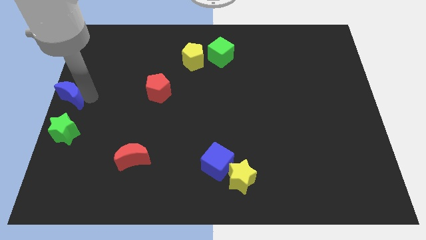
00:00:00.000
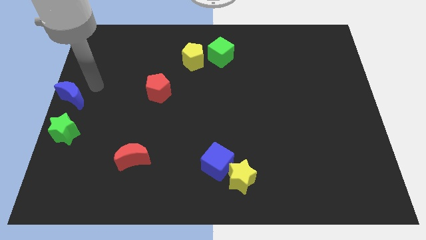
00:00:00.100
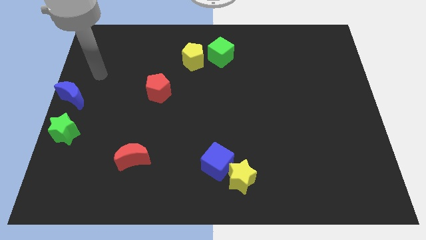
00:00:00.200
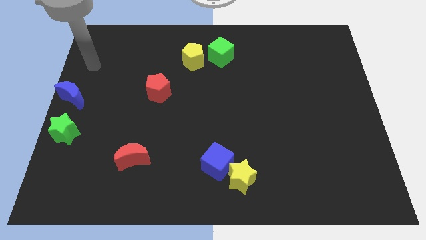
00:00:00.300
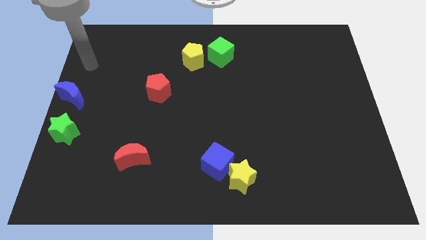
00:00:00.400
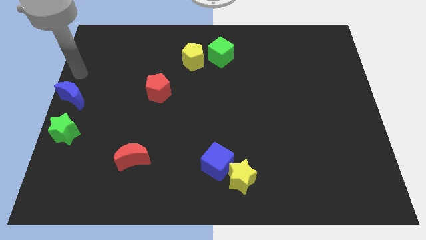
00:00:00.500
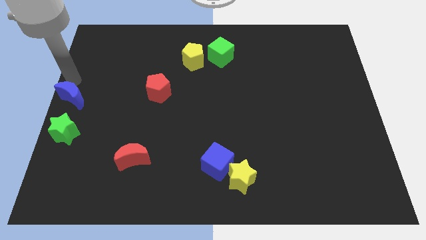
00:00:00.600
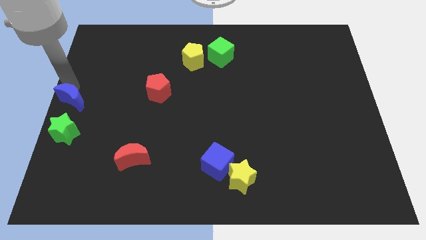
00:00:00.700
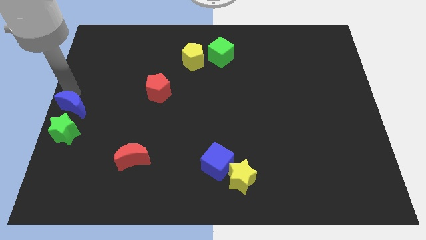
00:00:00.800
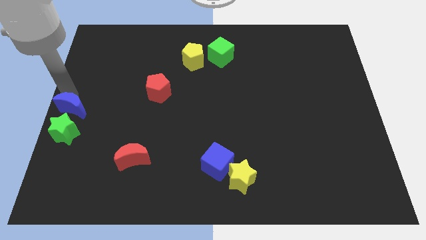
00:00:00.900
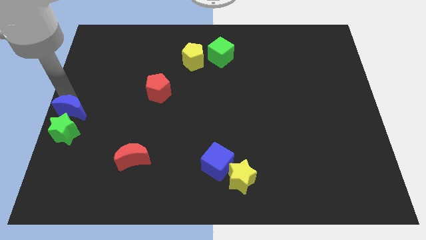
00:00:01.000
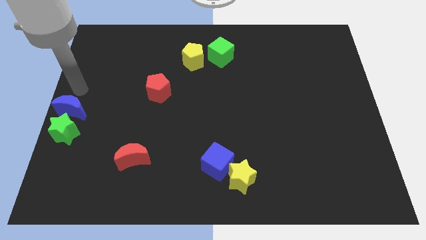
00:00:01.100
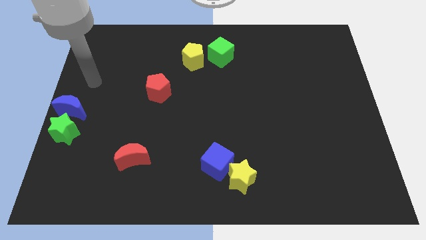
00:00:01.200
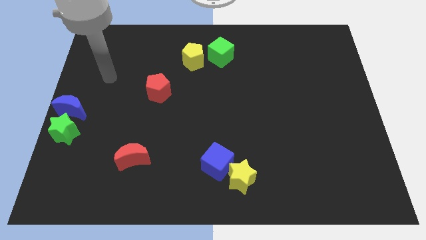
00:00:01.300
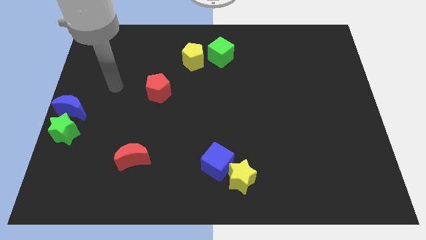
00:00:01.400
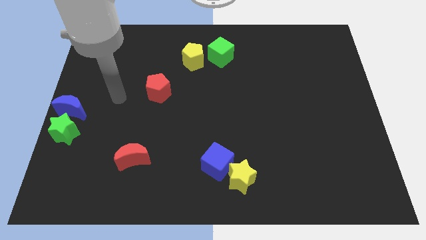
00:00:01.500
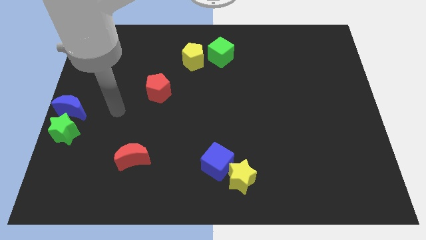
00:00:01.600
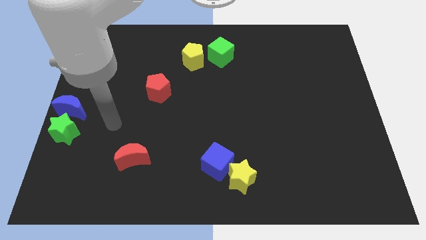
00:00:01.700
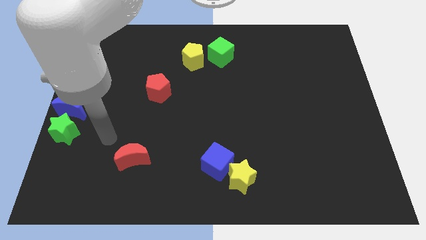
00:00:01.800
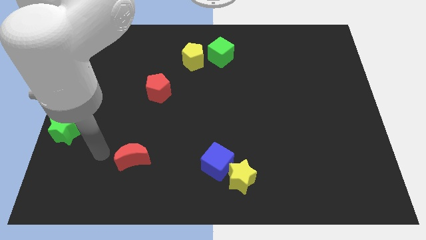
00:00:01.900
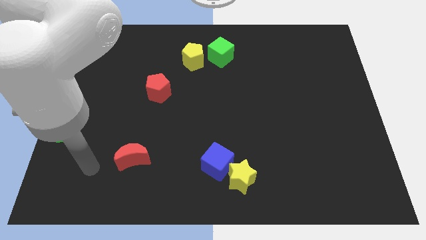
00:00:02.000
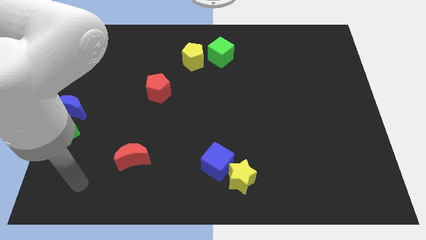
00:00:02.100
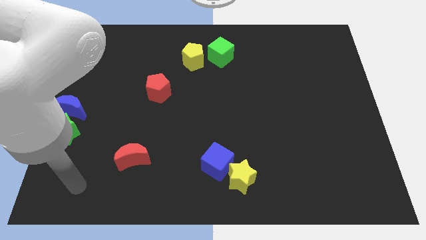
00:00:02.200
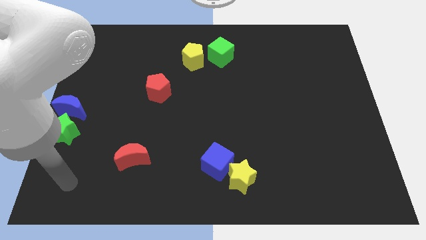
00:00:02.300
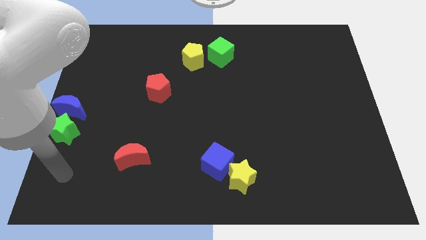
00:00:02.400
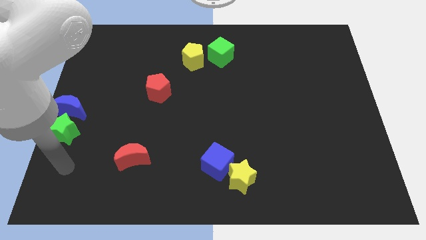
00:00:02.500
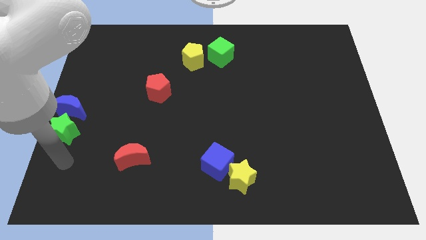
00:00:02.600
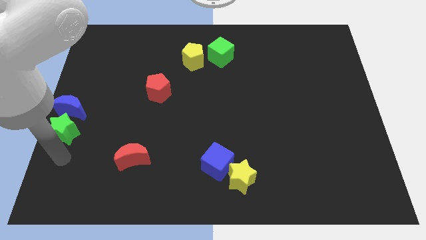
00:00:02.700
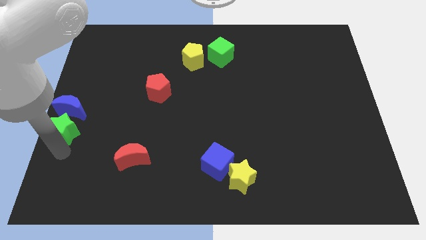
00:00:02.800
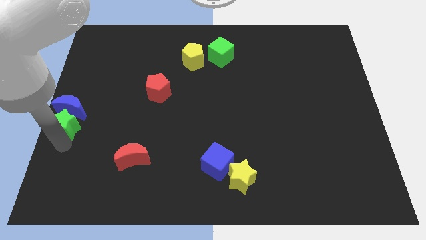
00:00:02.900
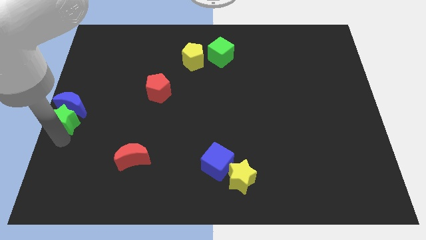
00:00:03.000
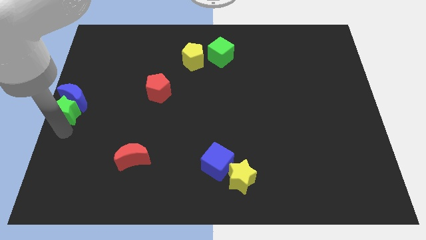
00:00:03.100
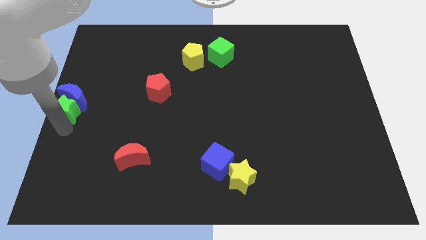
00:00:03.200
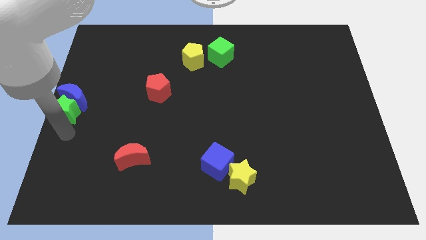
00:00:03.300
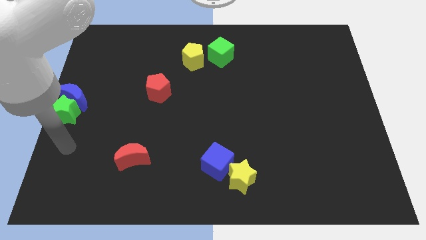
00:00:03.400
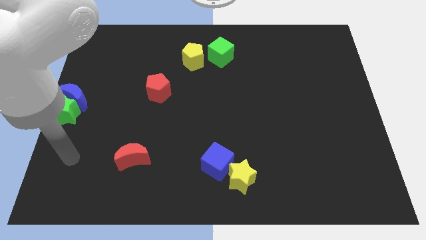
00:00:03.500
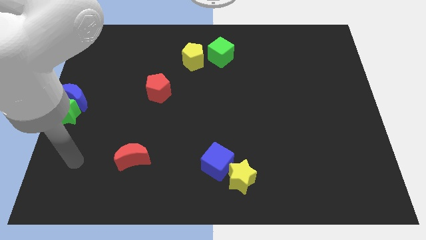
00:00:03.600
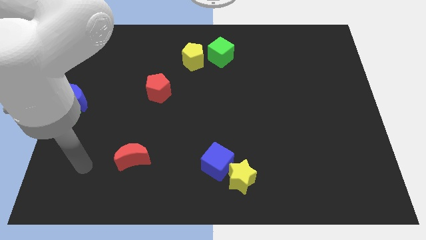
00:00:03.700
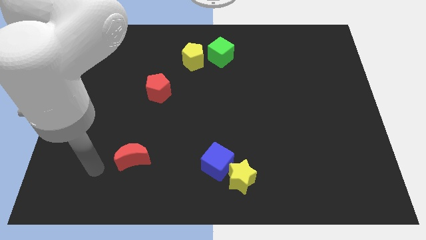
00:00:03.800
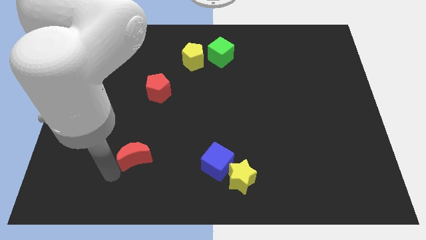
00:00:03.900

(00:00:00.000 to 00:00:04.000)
move green star into the blue crescent

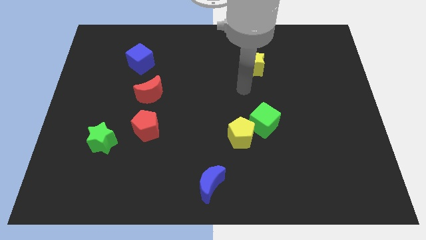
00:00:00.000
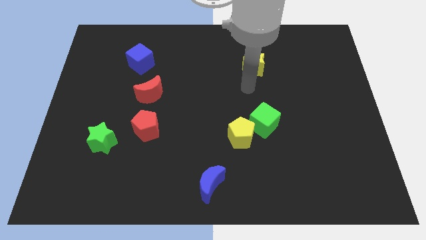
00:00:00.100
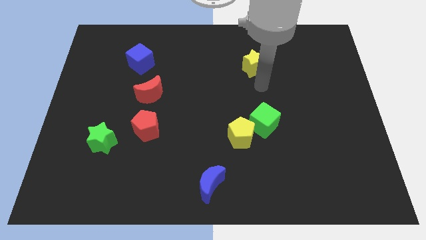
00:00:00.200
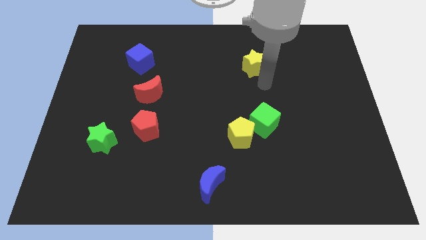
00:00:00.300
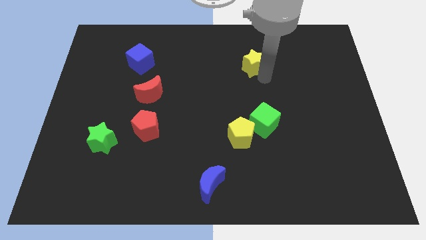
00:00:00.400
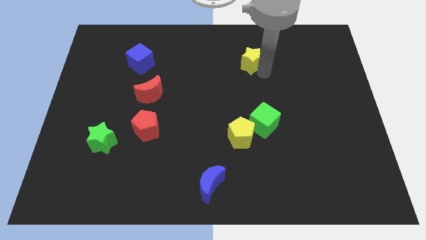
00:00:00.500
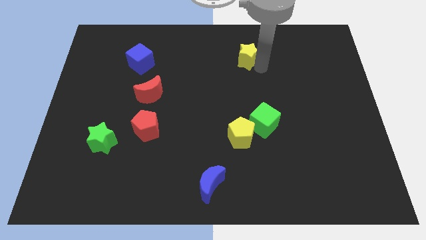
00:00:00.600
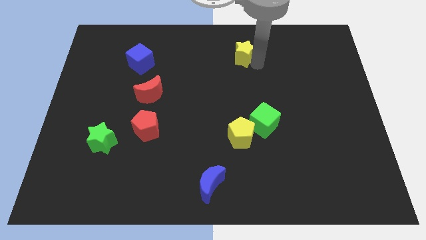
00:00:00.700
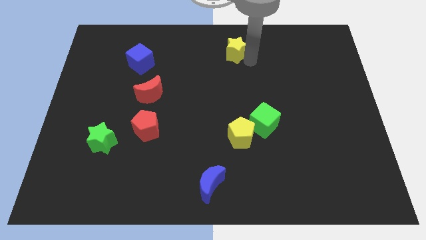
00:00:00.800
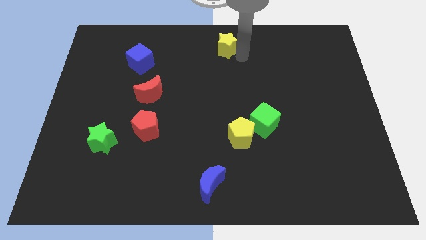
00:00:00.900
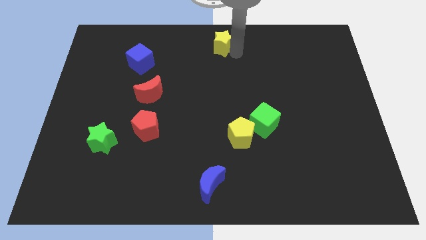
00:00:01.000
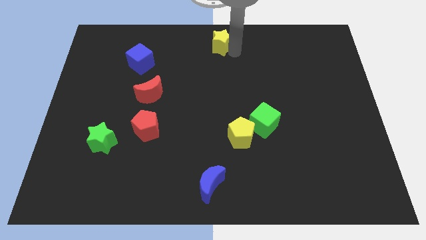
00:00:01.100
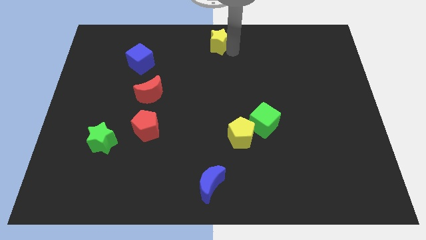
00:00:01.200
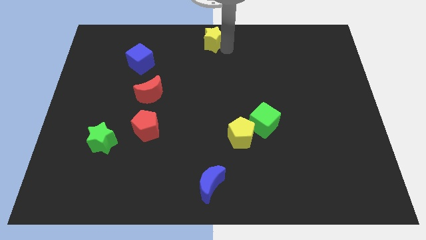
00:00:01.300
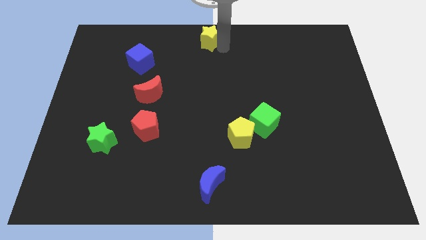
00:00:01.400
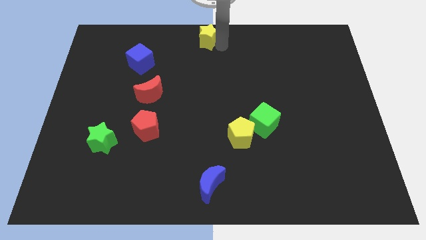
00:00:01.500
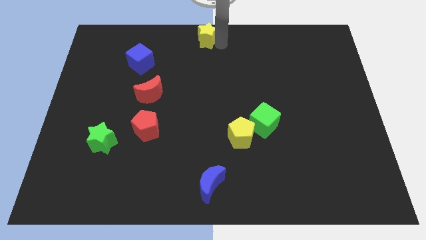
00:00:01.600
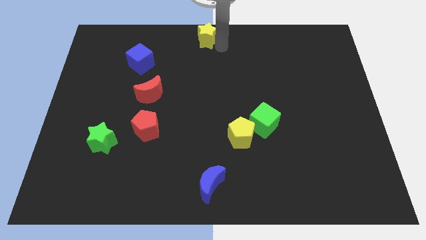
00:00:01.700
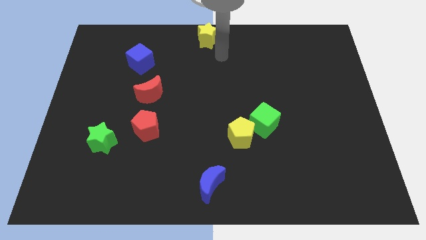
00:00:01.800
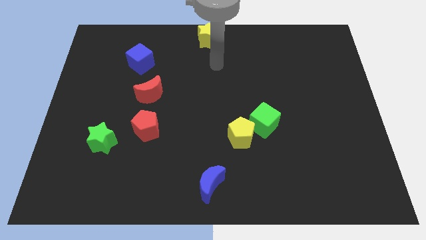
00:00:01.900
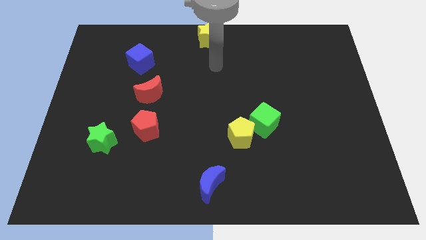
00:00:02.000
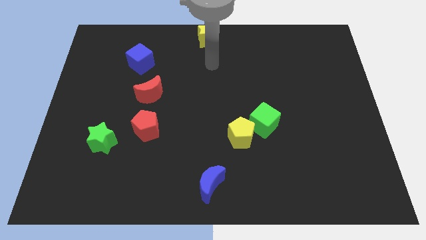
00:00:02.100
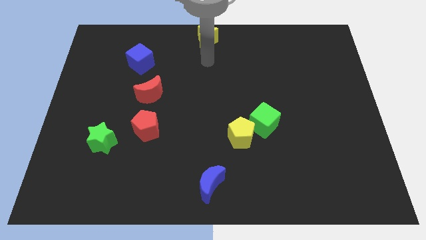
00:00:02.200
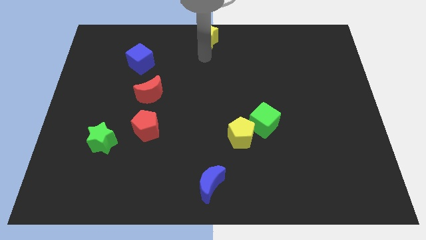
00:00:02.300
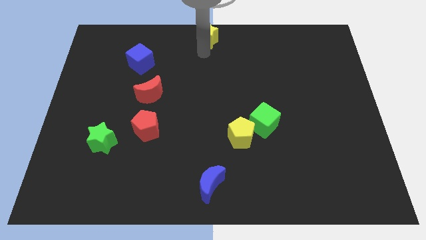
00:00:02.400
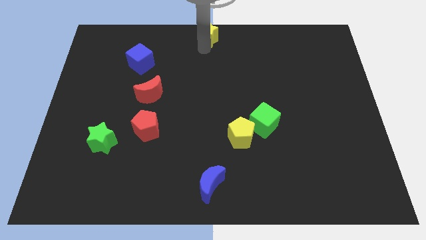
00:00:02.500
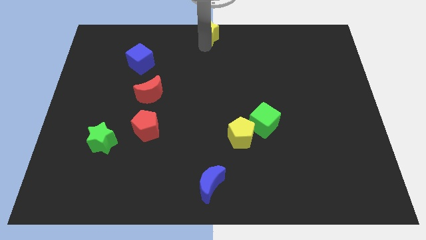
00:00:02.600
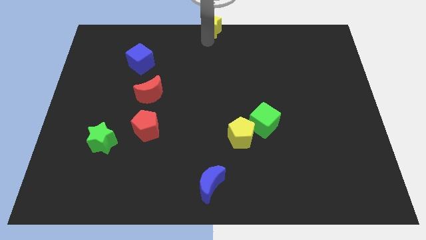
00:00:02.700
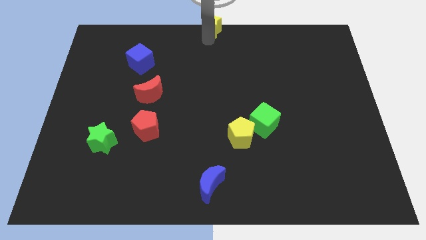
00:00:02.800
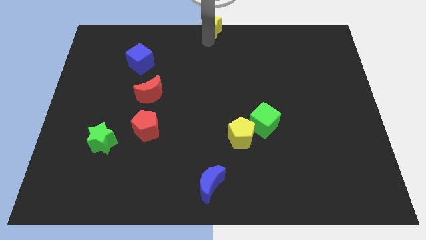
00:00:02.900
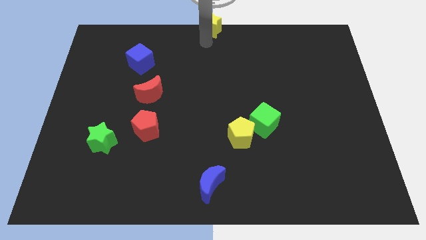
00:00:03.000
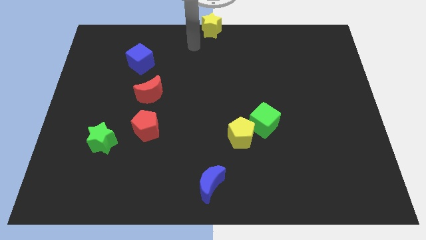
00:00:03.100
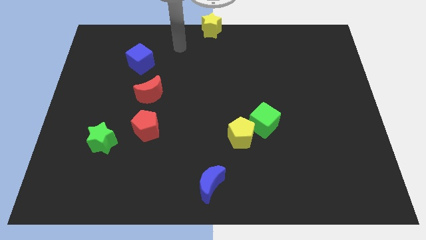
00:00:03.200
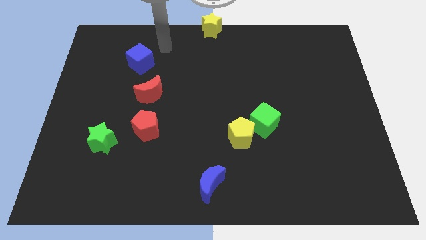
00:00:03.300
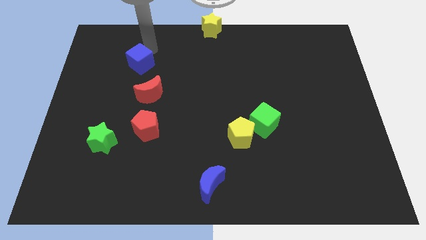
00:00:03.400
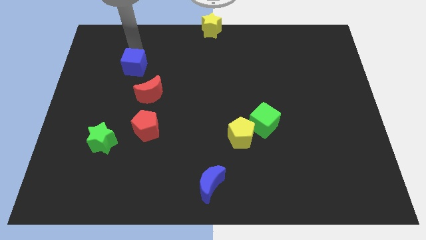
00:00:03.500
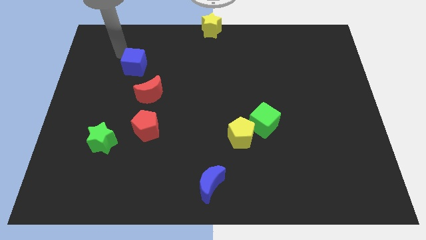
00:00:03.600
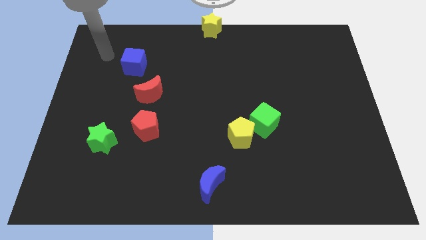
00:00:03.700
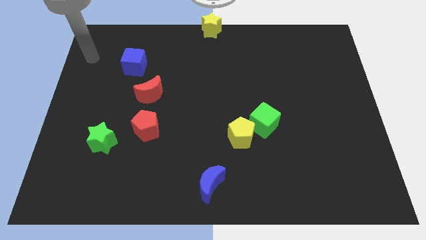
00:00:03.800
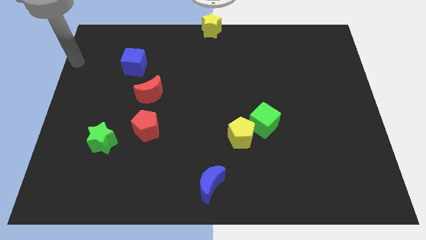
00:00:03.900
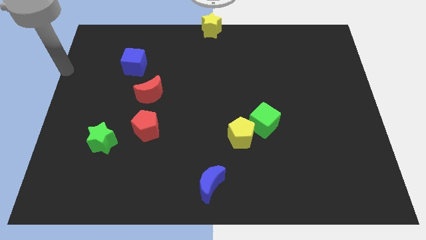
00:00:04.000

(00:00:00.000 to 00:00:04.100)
slightly touch on the top of the blue cube

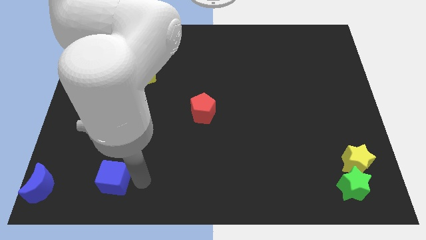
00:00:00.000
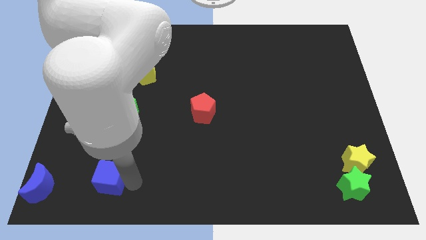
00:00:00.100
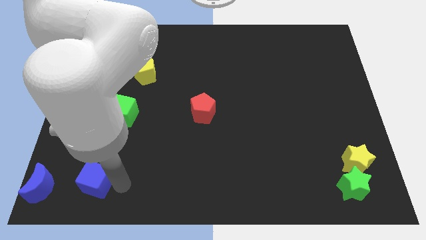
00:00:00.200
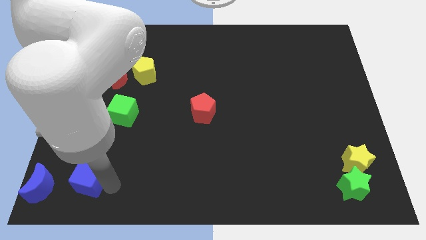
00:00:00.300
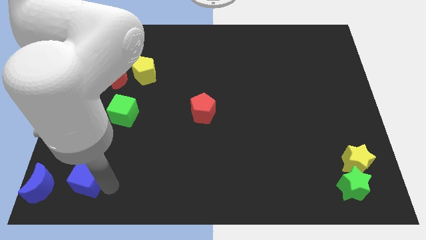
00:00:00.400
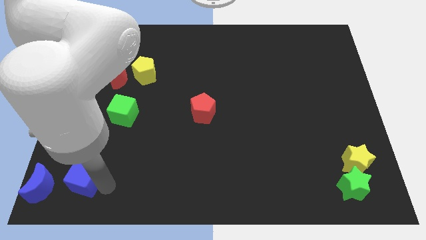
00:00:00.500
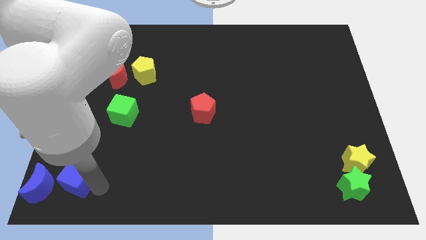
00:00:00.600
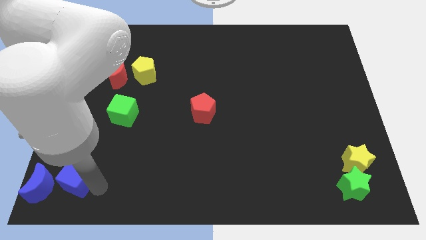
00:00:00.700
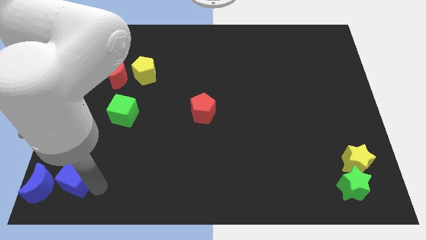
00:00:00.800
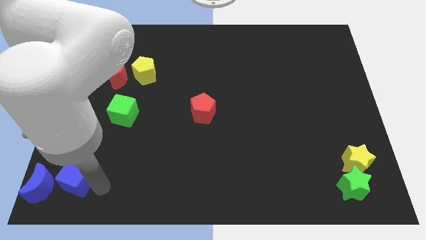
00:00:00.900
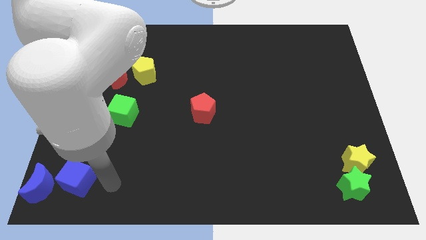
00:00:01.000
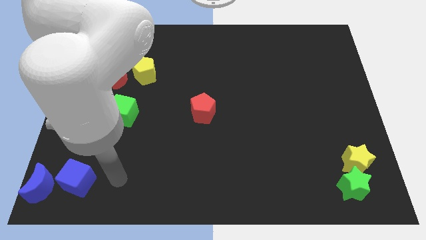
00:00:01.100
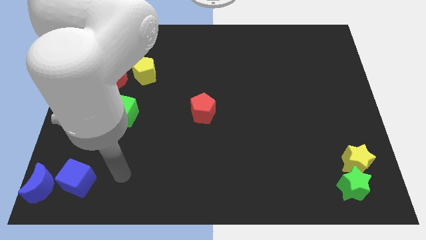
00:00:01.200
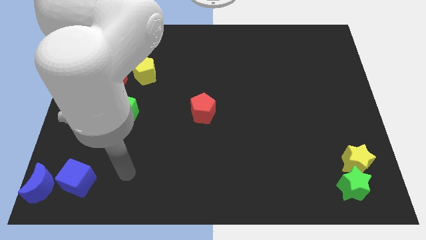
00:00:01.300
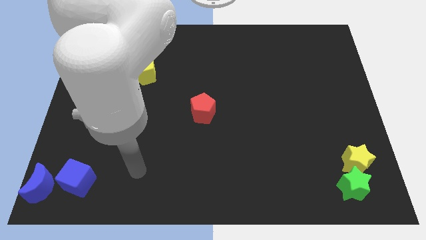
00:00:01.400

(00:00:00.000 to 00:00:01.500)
place the blue cube close to the blue moon
